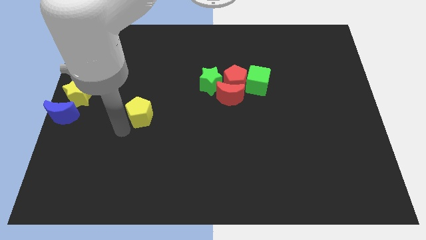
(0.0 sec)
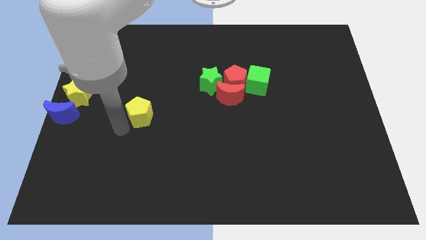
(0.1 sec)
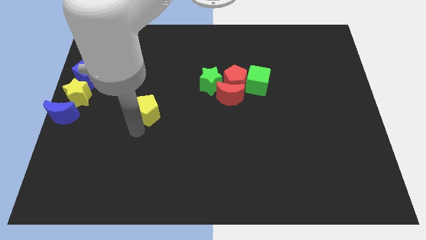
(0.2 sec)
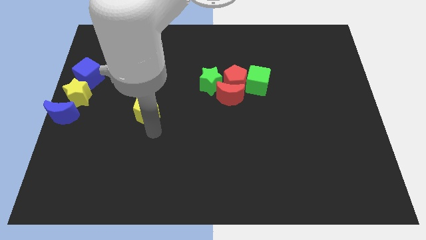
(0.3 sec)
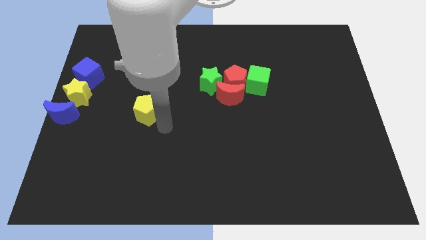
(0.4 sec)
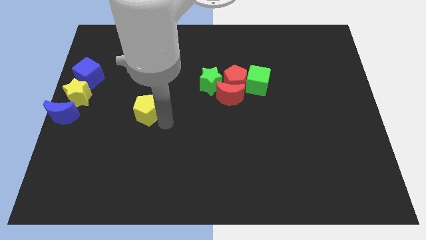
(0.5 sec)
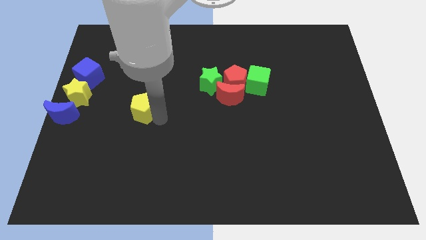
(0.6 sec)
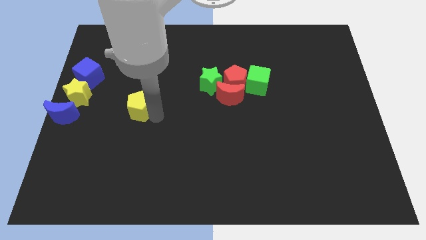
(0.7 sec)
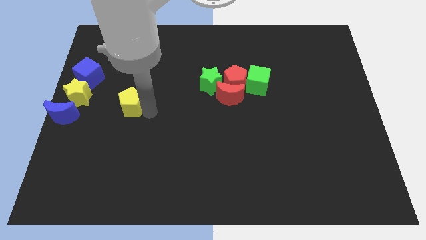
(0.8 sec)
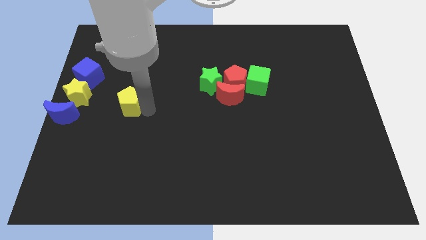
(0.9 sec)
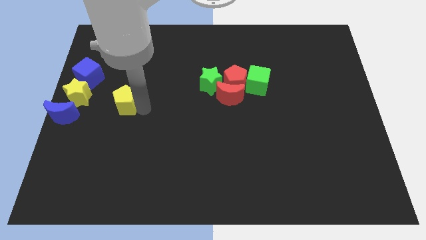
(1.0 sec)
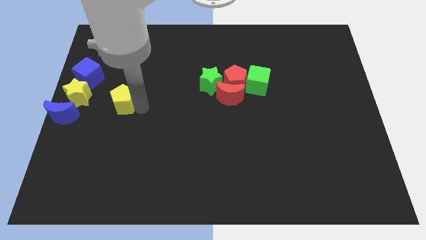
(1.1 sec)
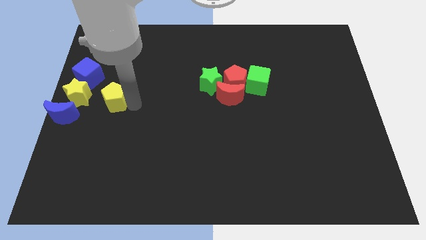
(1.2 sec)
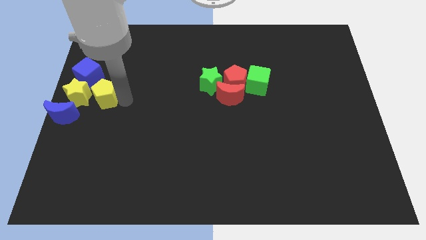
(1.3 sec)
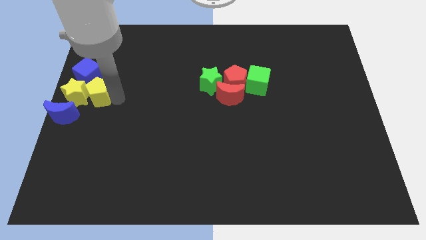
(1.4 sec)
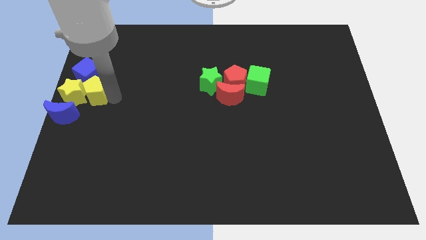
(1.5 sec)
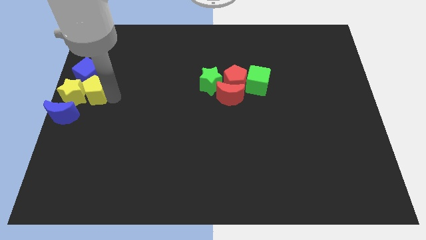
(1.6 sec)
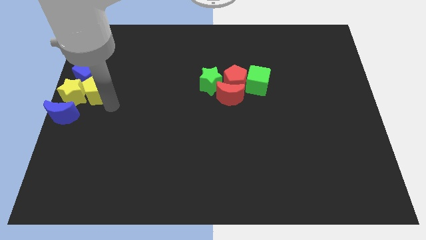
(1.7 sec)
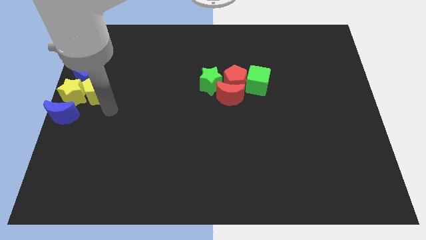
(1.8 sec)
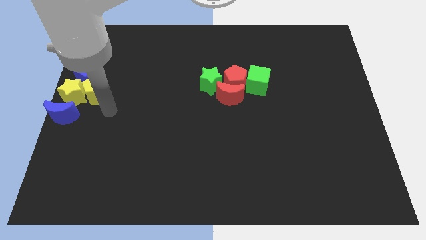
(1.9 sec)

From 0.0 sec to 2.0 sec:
put the yellow pentagon into the yellow star

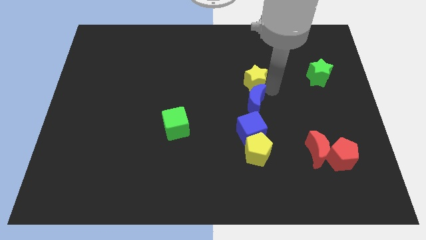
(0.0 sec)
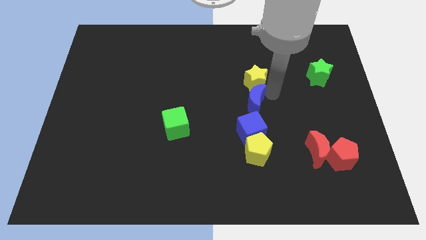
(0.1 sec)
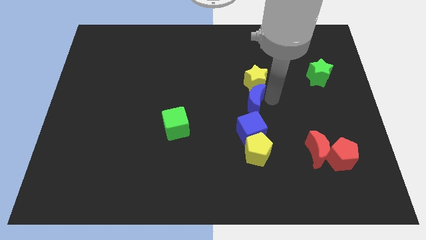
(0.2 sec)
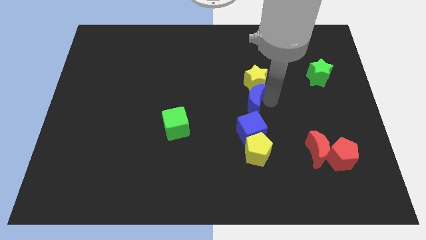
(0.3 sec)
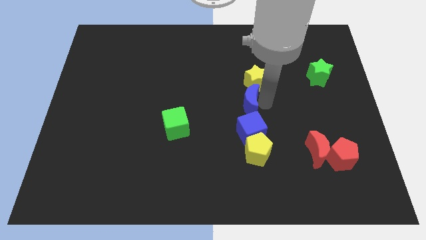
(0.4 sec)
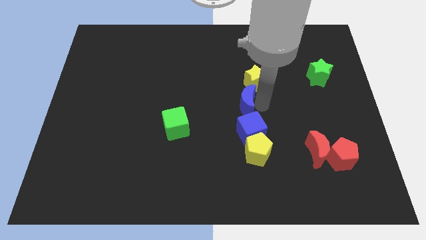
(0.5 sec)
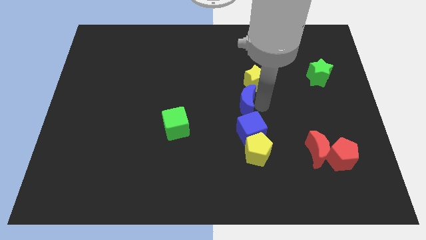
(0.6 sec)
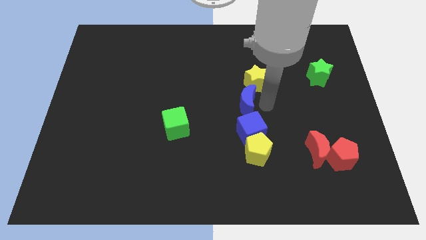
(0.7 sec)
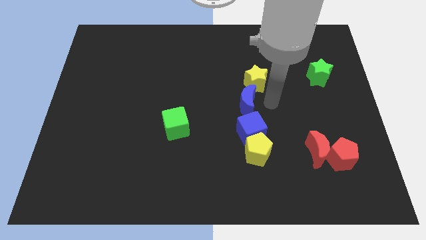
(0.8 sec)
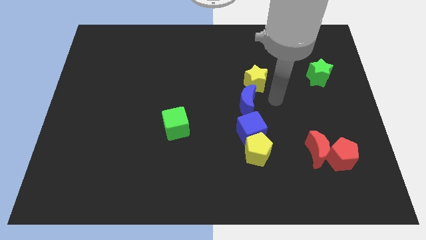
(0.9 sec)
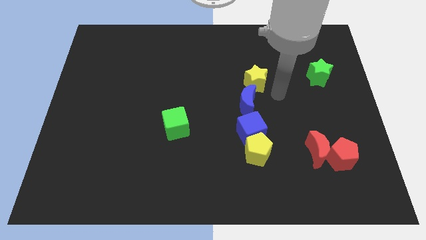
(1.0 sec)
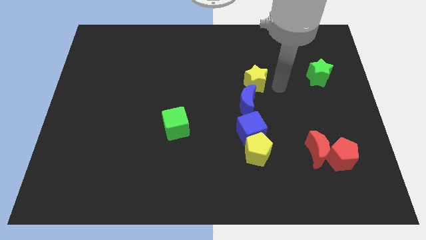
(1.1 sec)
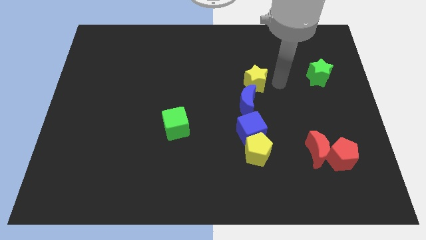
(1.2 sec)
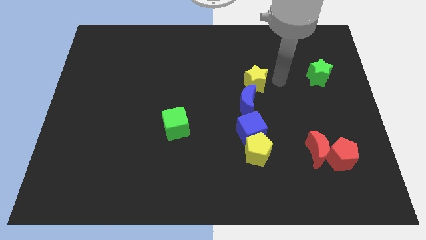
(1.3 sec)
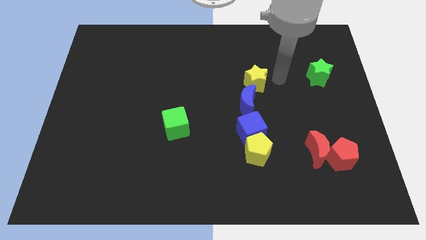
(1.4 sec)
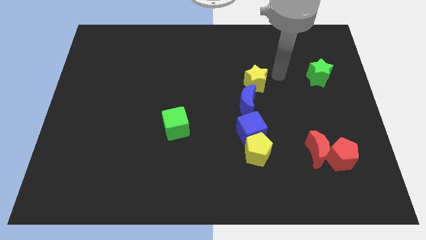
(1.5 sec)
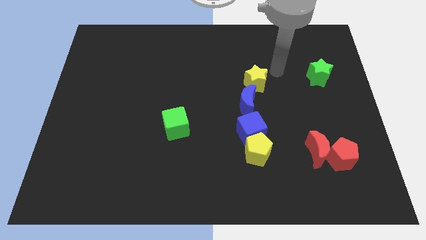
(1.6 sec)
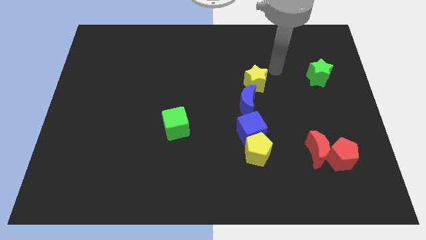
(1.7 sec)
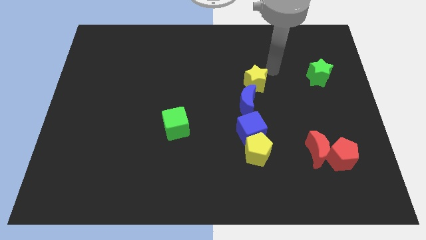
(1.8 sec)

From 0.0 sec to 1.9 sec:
slide the blue crescent slightly to the left side of the board

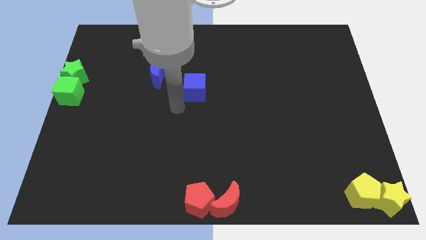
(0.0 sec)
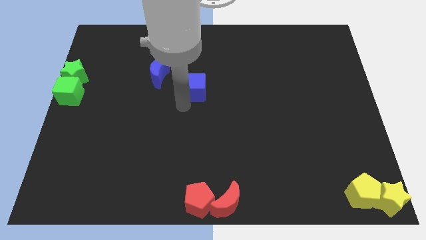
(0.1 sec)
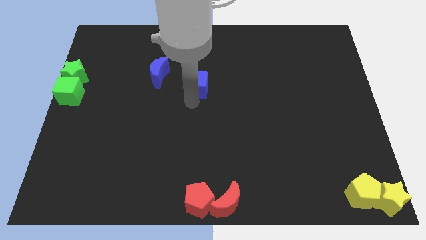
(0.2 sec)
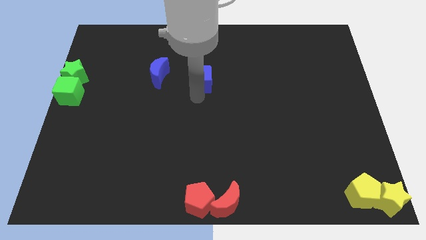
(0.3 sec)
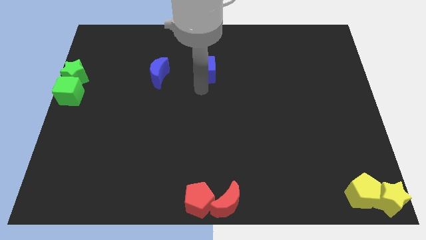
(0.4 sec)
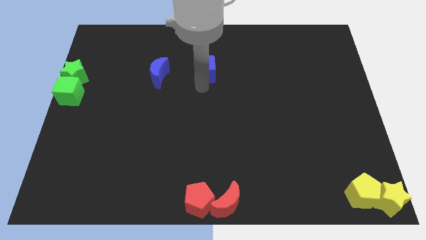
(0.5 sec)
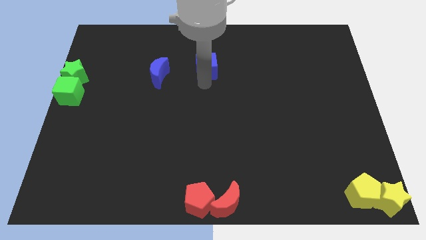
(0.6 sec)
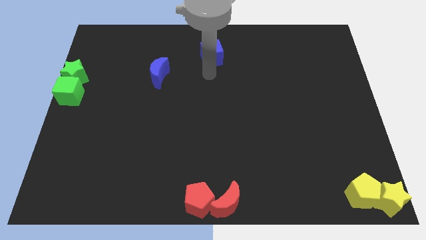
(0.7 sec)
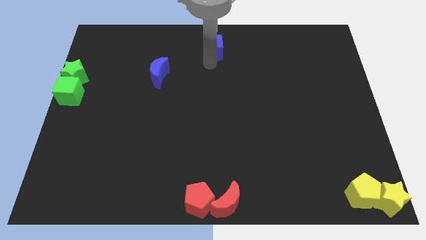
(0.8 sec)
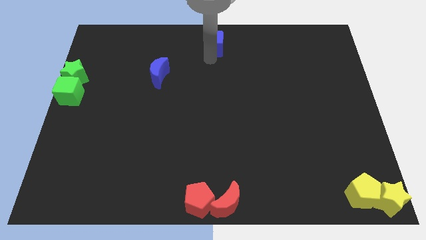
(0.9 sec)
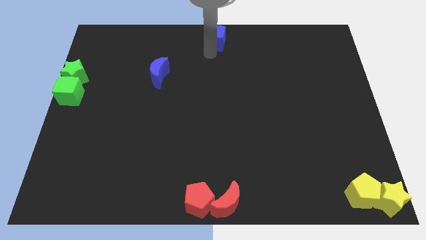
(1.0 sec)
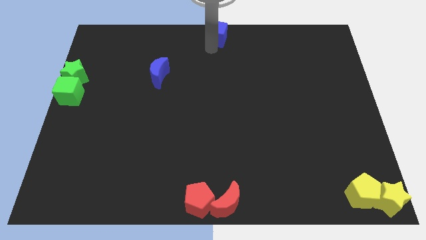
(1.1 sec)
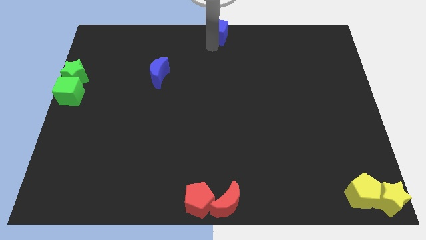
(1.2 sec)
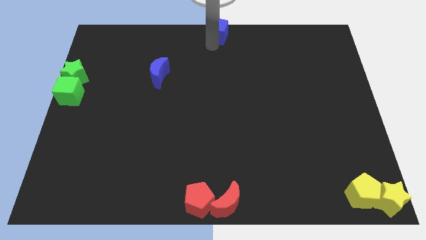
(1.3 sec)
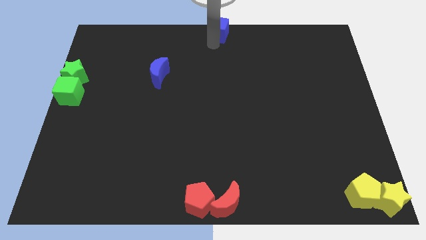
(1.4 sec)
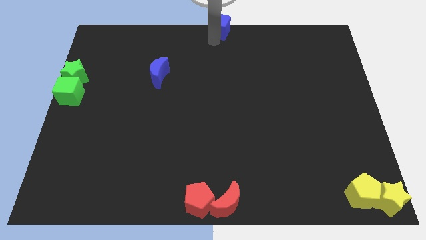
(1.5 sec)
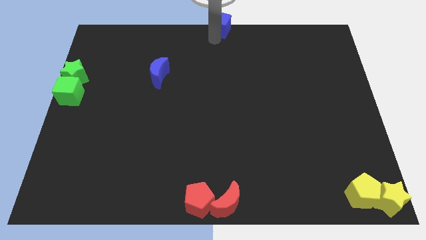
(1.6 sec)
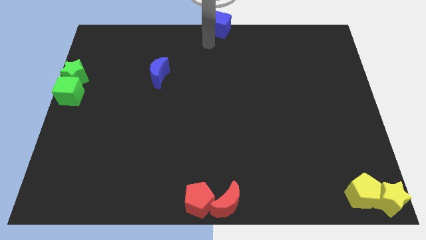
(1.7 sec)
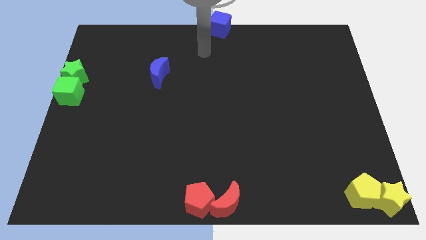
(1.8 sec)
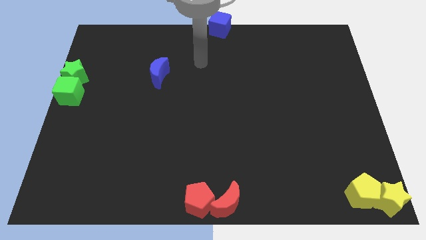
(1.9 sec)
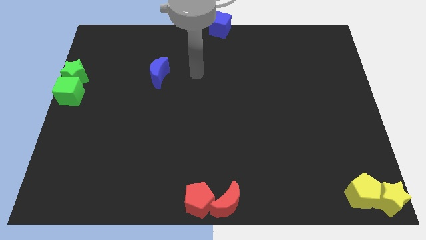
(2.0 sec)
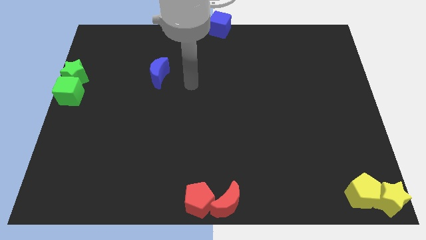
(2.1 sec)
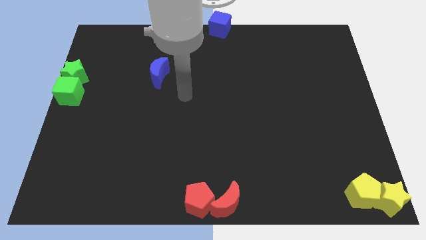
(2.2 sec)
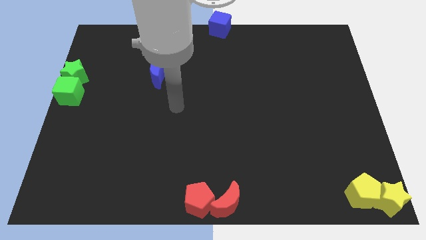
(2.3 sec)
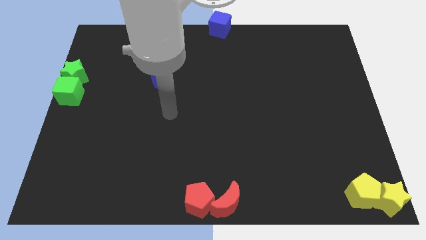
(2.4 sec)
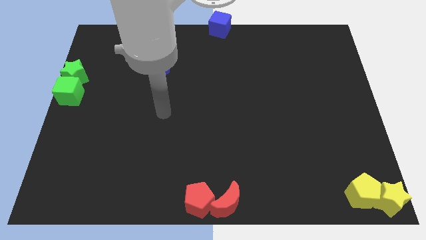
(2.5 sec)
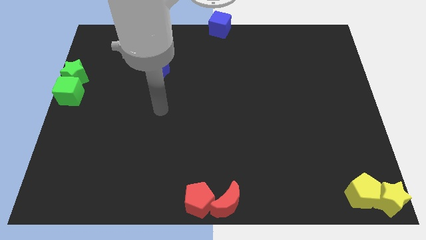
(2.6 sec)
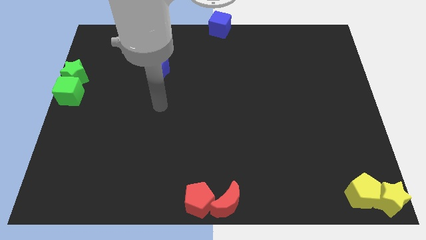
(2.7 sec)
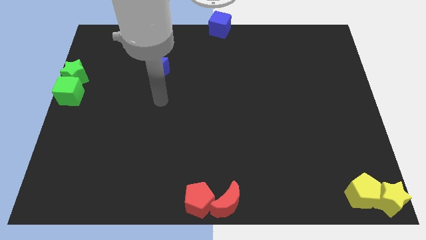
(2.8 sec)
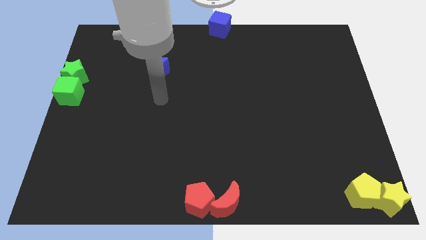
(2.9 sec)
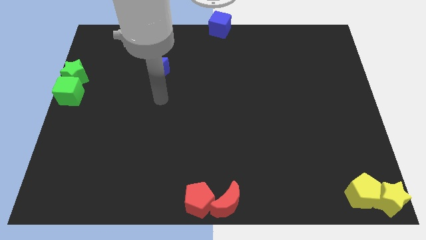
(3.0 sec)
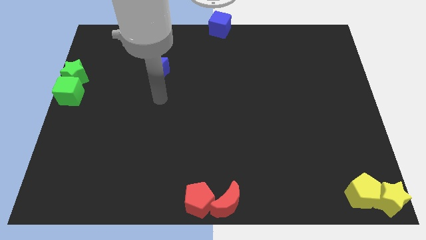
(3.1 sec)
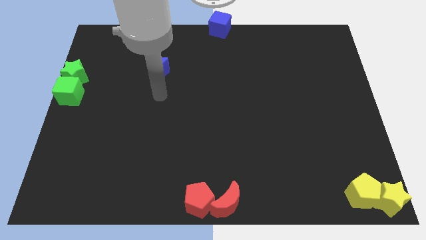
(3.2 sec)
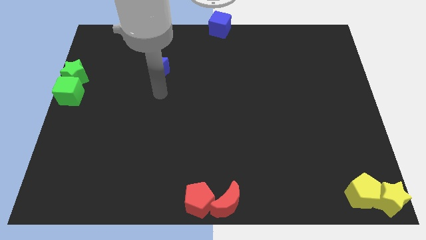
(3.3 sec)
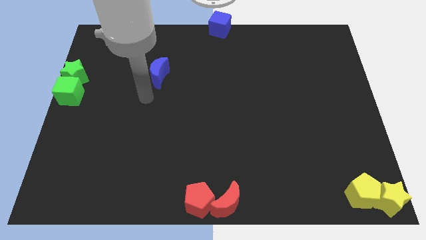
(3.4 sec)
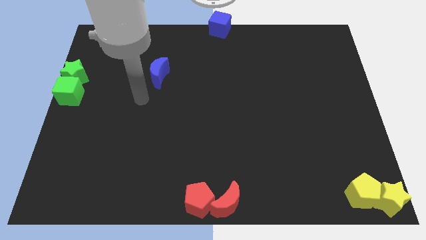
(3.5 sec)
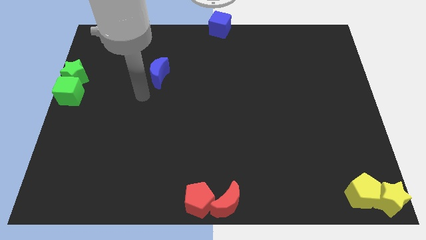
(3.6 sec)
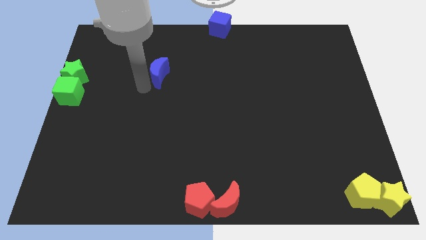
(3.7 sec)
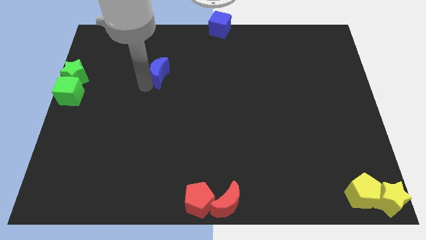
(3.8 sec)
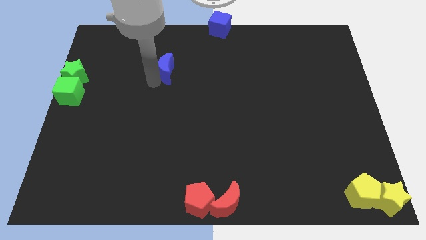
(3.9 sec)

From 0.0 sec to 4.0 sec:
place the blue cube at the top center

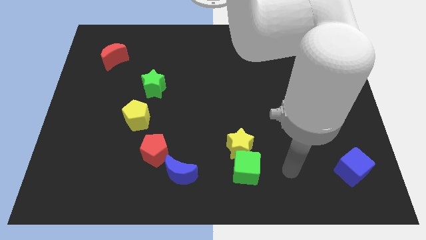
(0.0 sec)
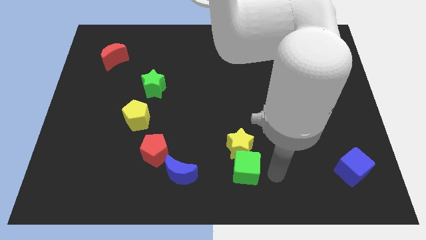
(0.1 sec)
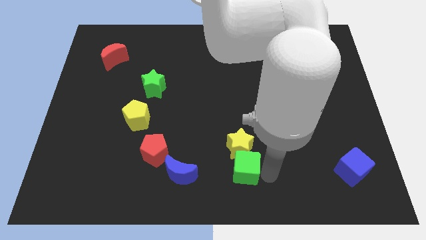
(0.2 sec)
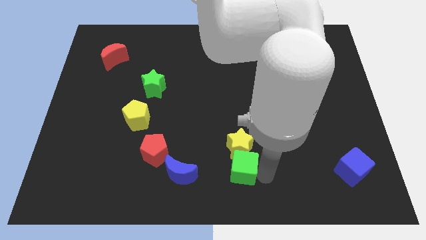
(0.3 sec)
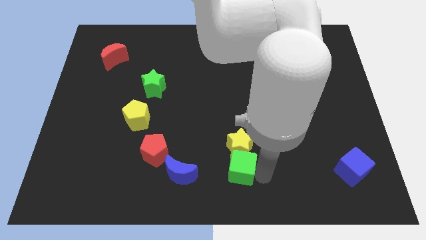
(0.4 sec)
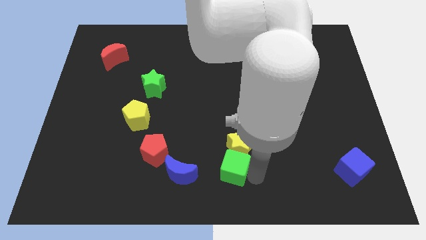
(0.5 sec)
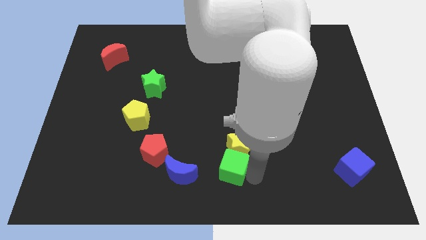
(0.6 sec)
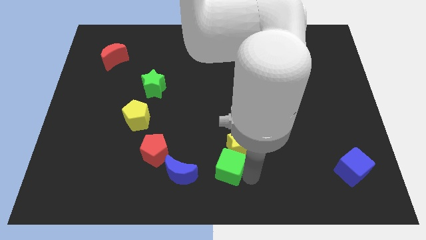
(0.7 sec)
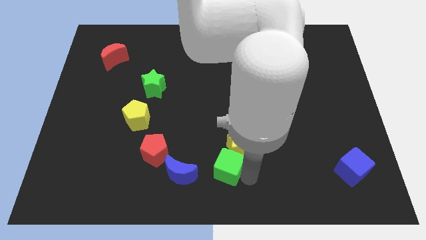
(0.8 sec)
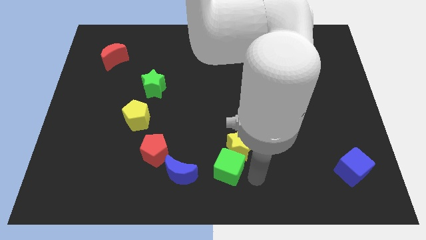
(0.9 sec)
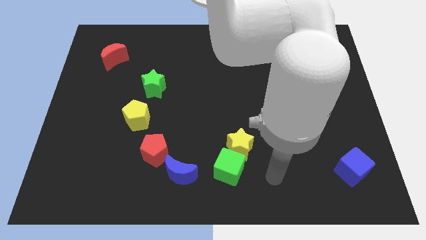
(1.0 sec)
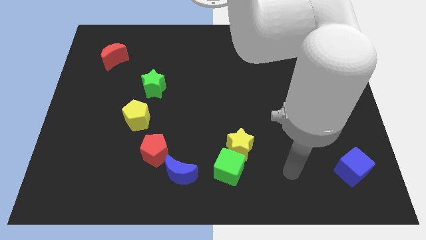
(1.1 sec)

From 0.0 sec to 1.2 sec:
move the green cube to the right side of blue crescent
